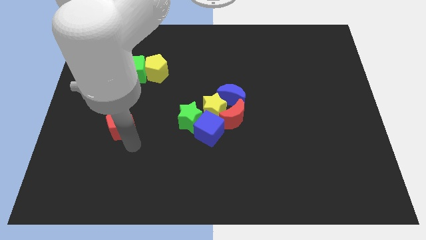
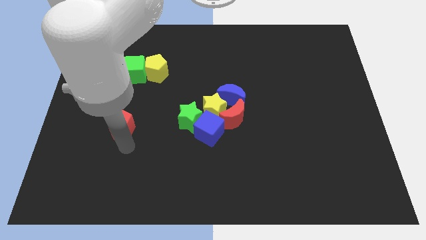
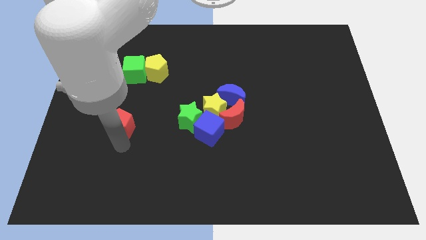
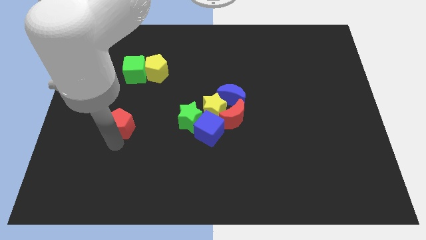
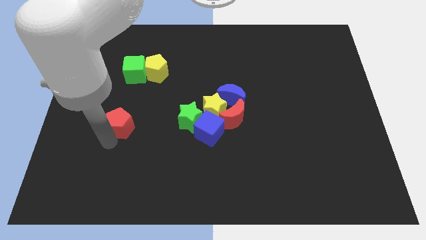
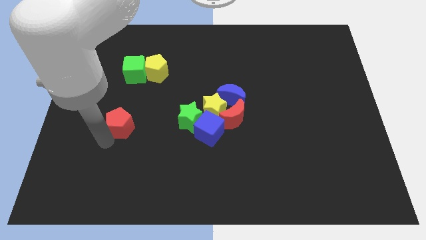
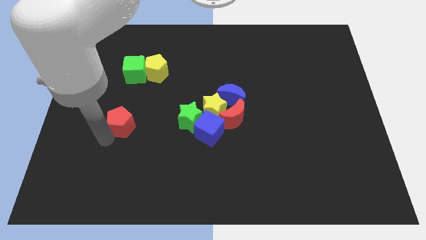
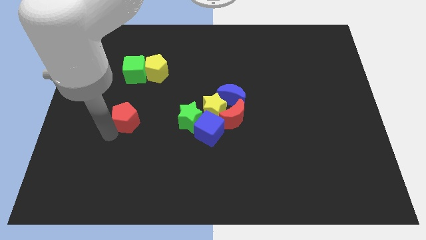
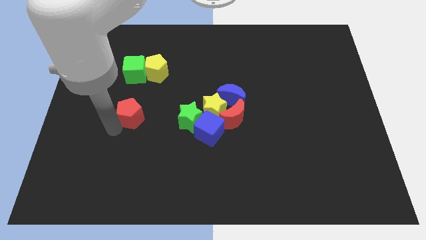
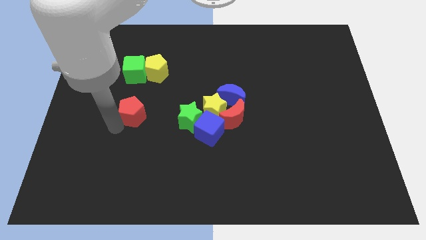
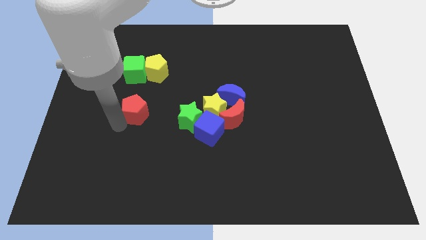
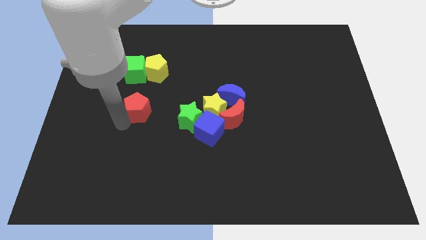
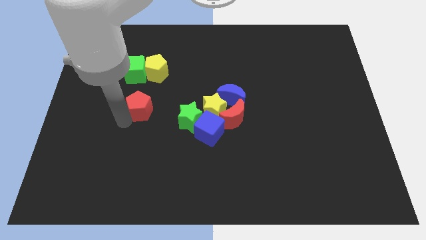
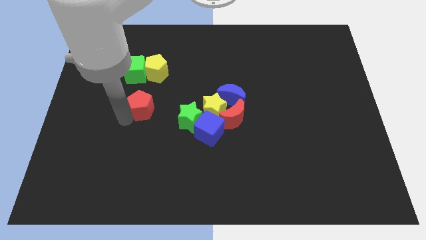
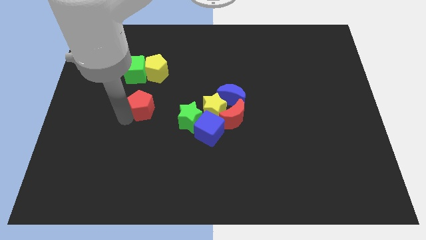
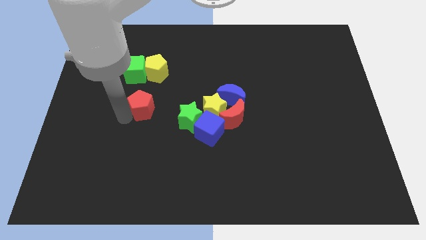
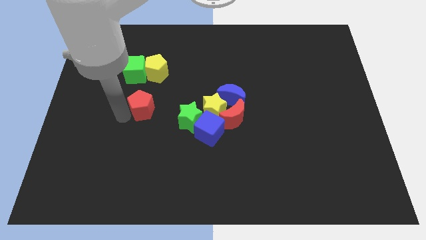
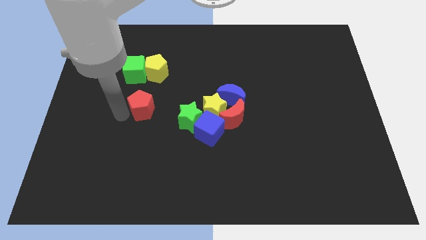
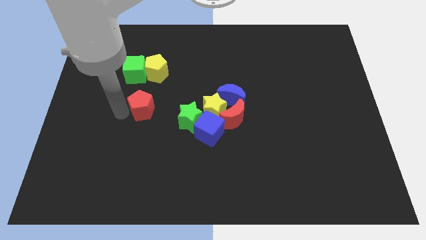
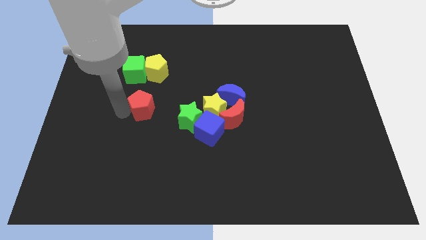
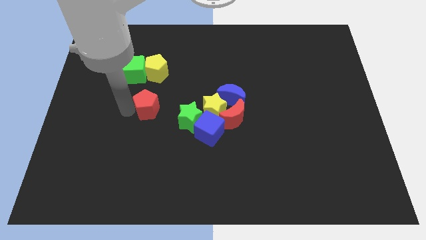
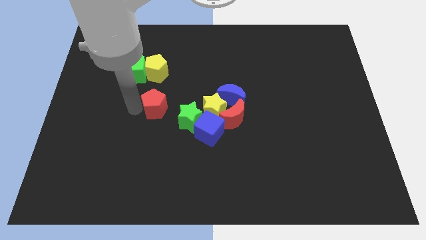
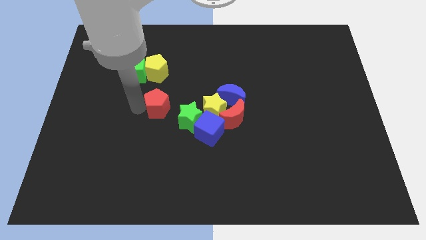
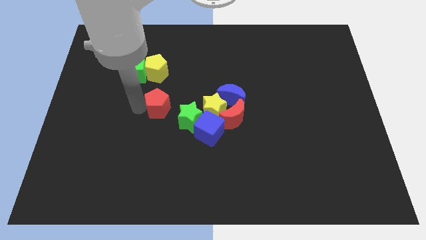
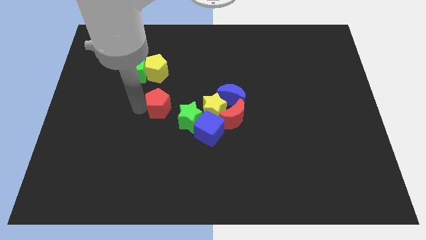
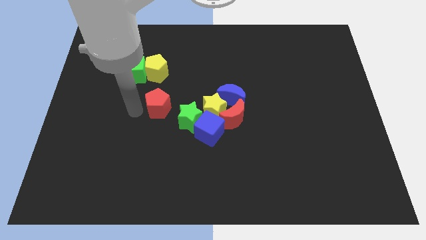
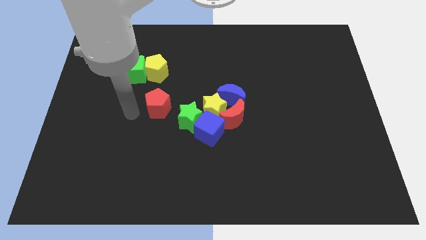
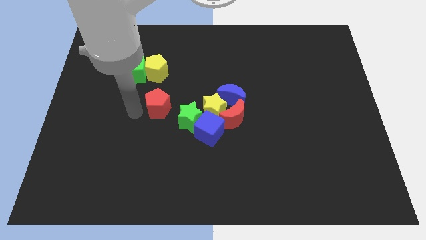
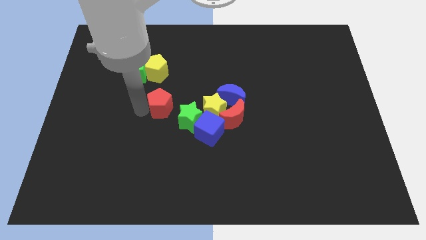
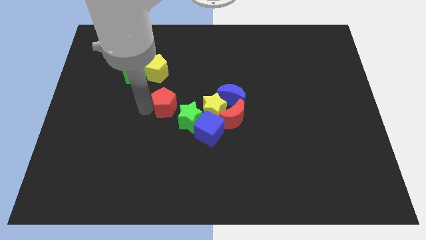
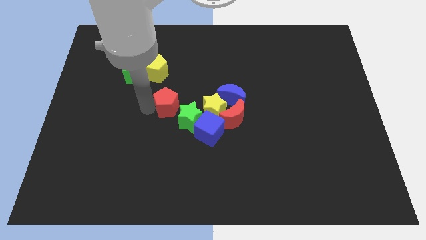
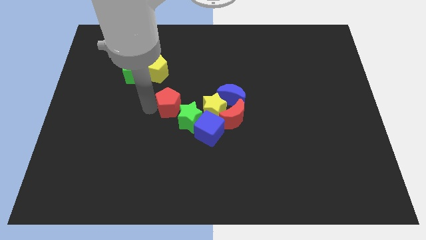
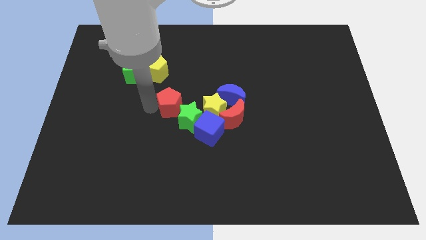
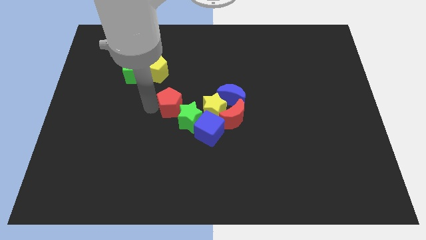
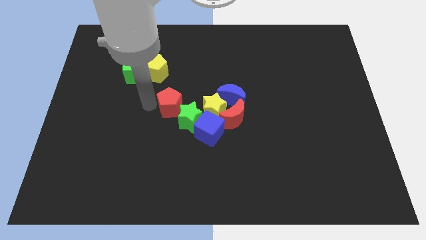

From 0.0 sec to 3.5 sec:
move the red pentagon into the green star to the left

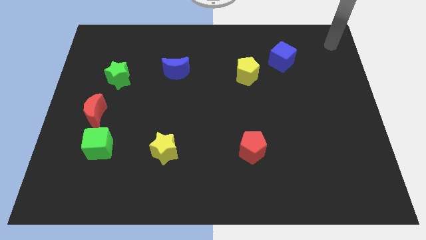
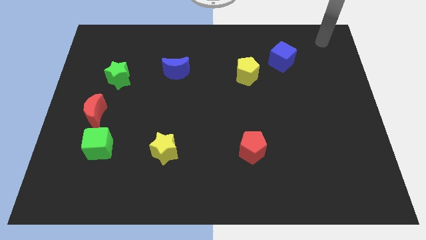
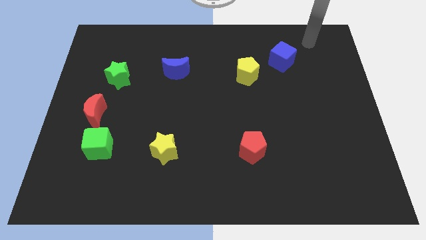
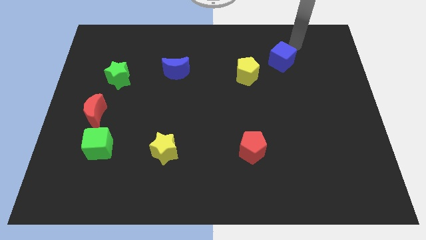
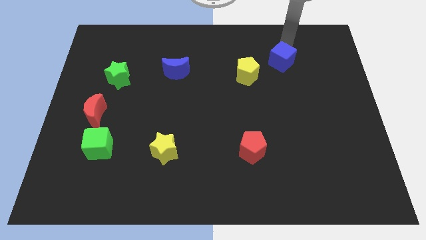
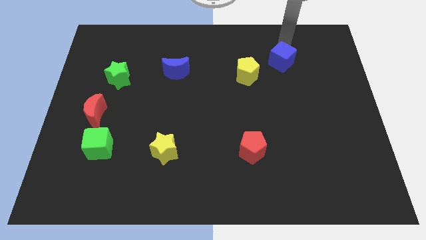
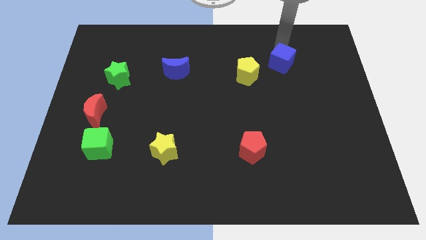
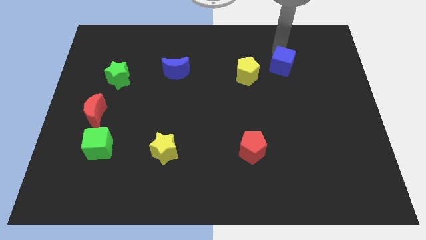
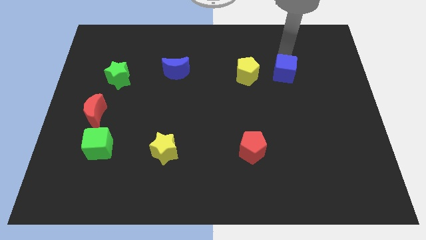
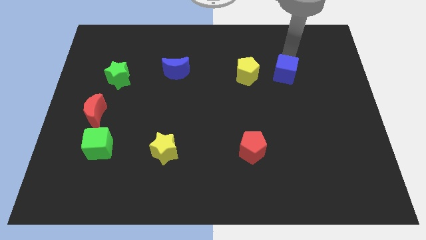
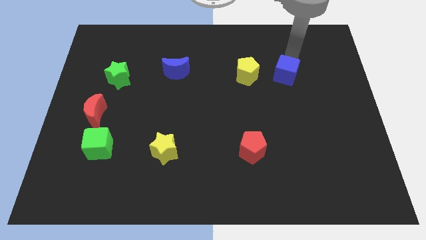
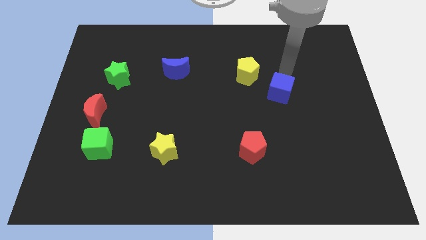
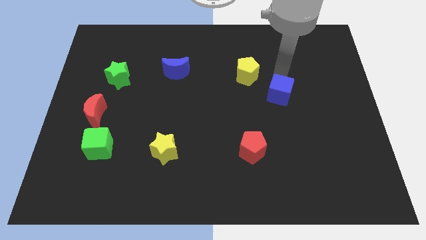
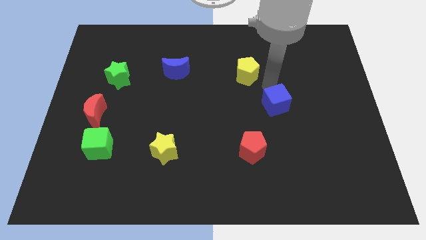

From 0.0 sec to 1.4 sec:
push blue cube slightly to the bottom of the board

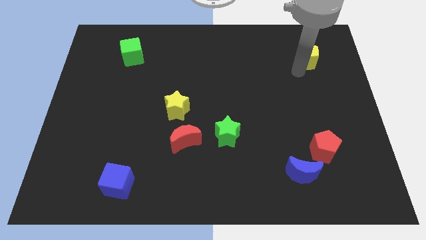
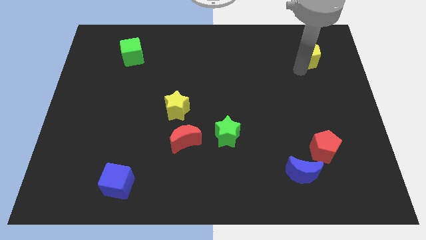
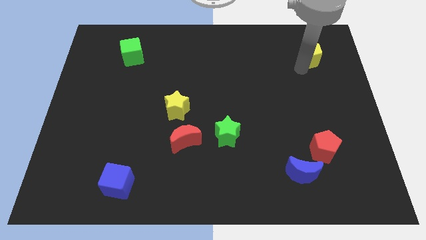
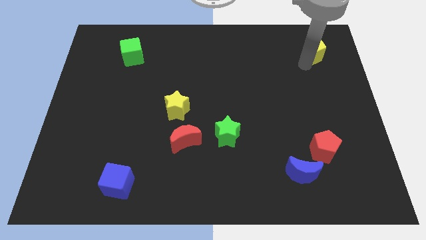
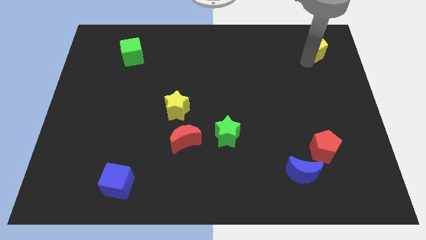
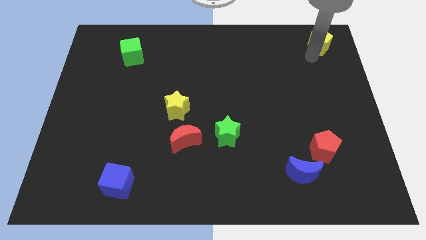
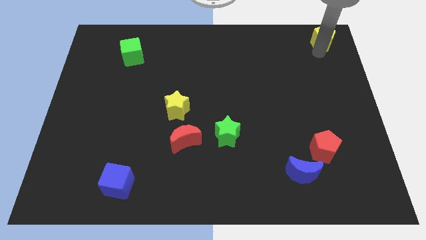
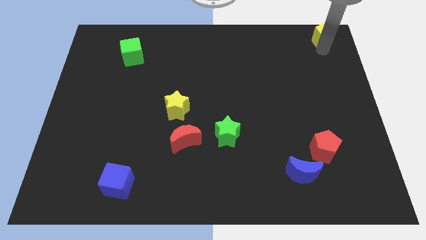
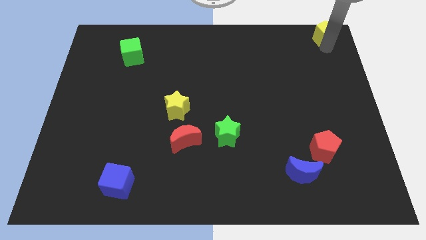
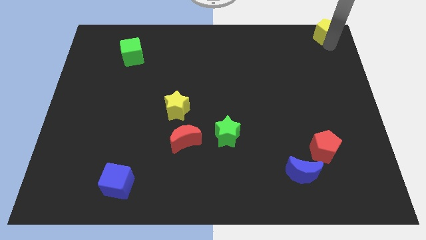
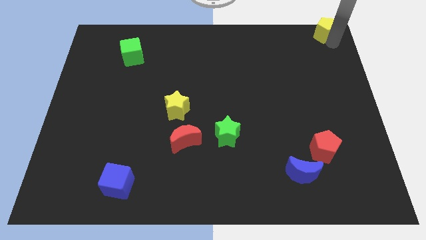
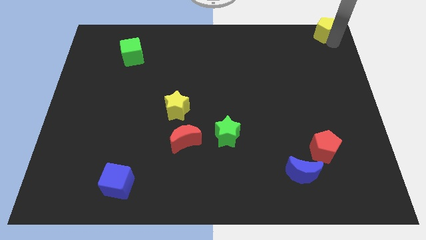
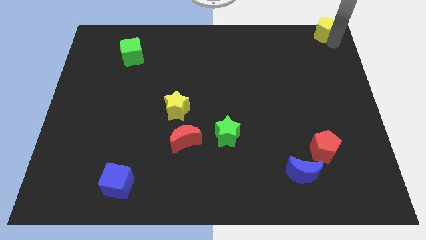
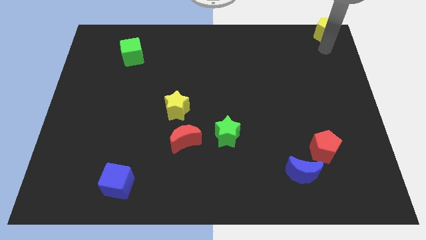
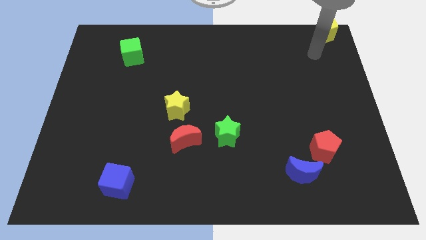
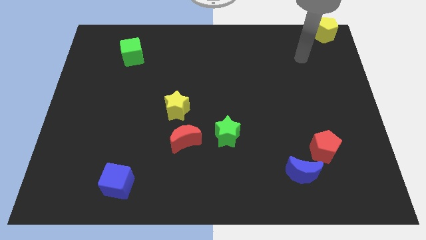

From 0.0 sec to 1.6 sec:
push the yellow pentagan towards the right left corner of the board

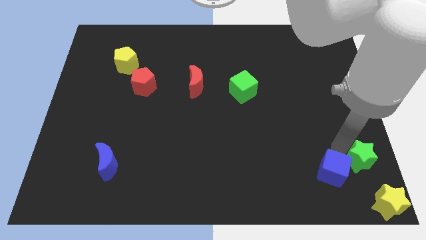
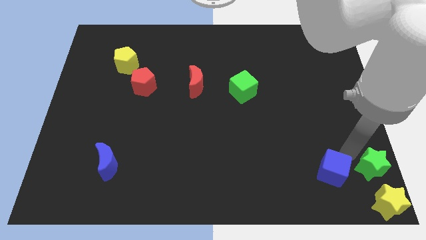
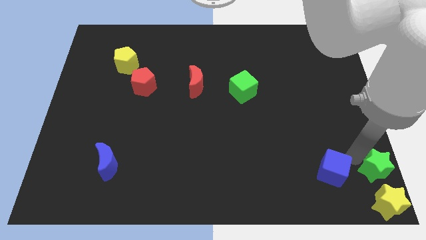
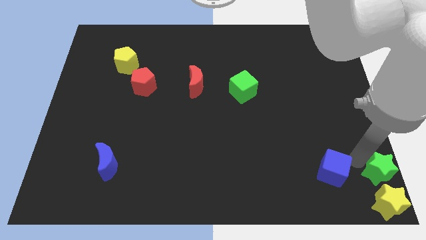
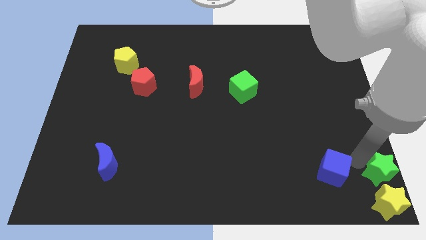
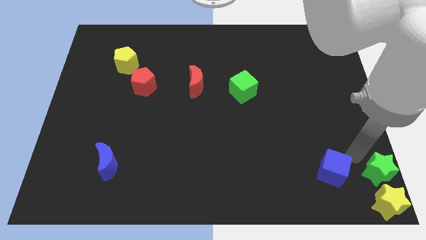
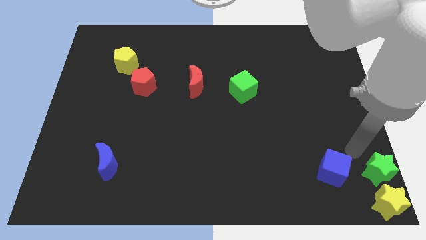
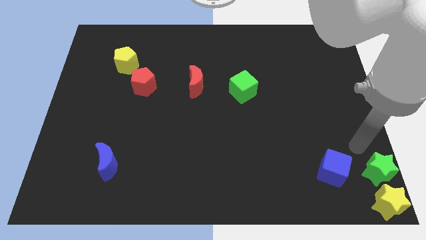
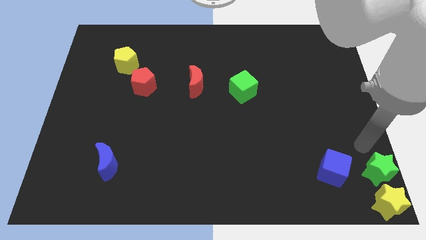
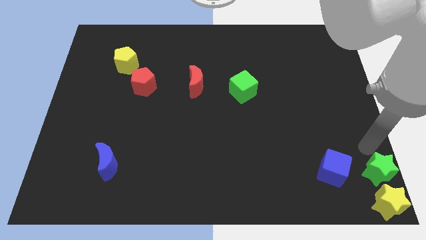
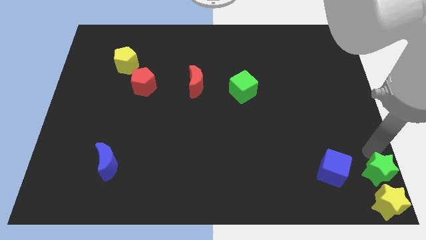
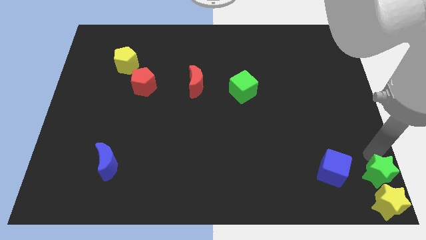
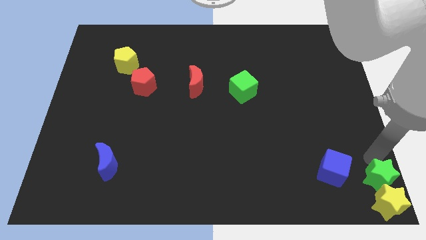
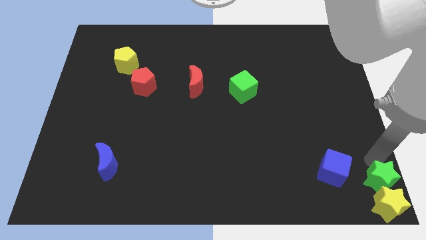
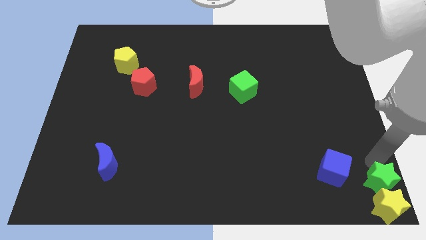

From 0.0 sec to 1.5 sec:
move green star into the yellow star

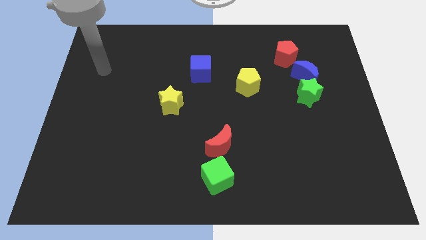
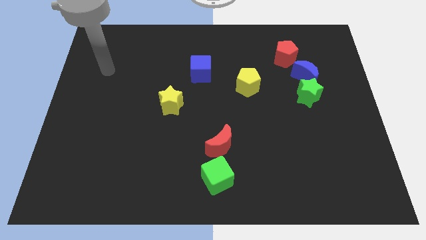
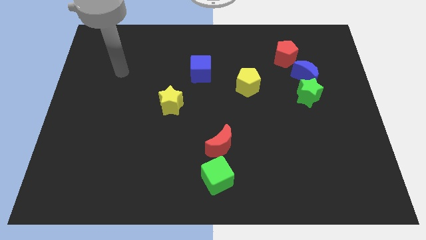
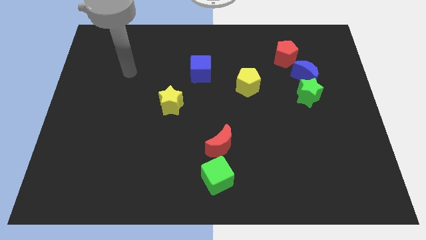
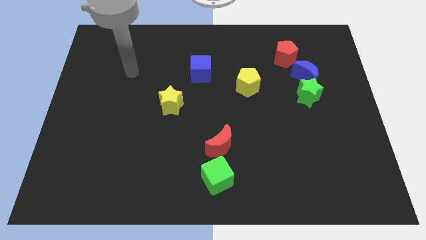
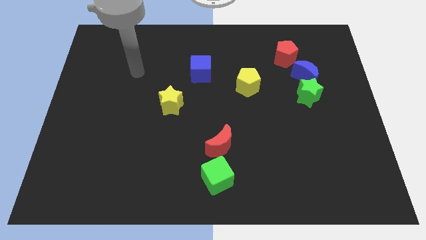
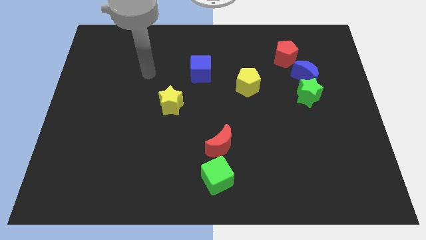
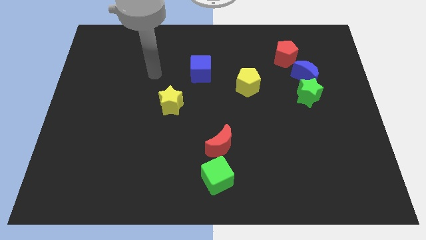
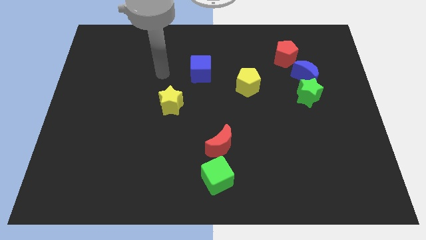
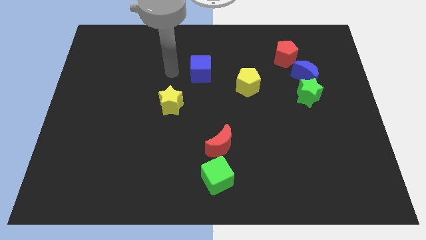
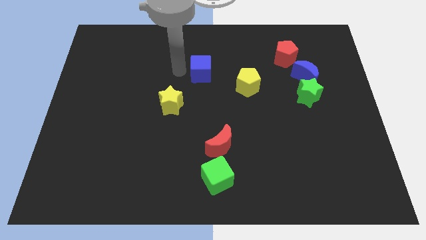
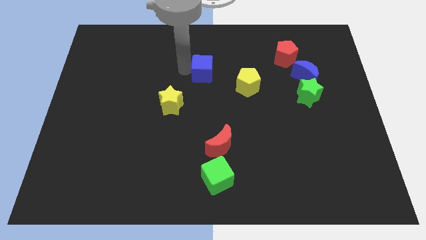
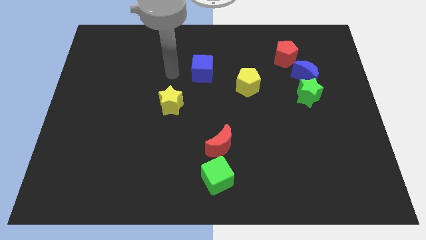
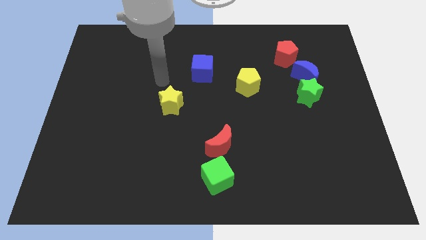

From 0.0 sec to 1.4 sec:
slightly move the blue cube to the right
